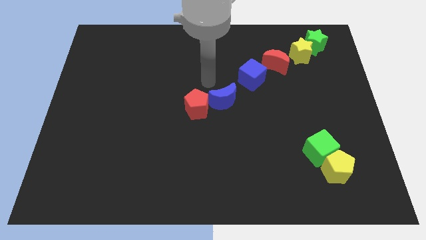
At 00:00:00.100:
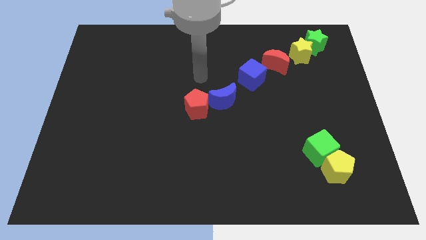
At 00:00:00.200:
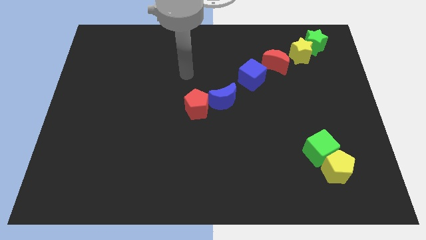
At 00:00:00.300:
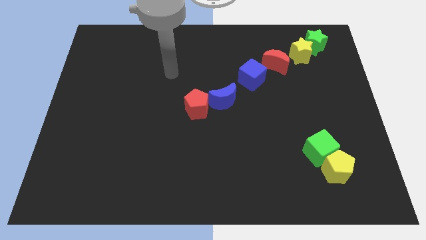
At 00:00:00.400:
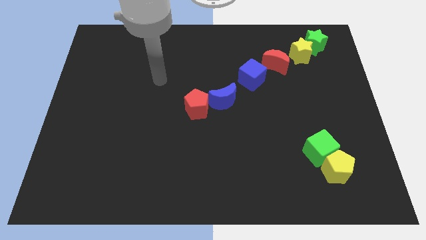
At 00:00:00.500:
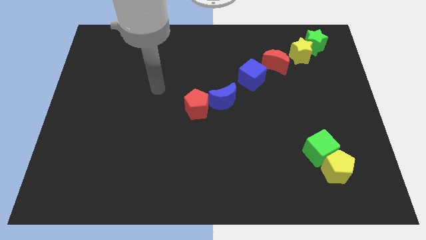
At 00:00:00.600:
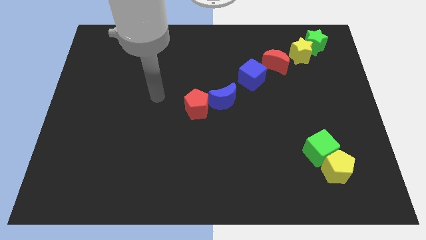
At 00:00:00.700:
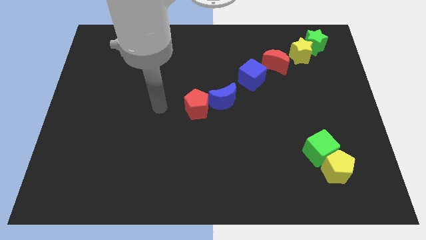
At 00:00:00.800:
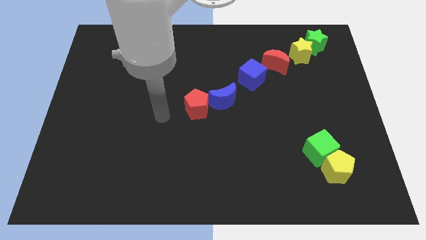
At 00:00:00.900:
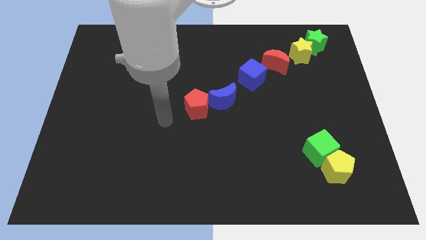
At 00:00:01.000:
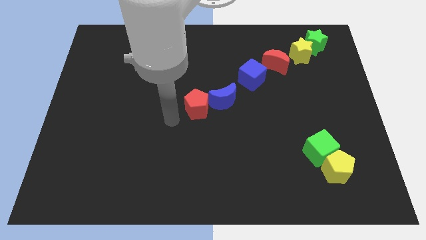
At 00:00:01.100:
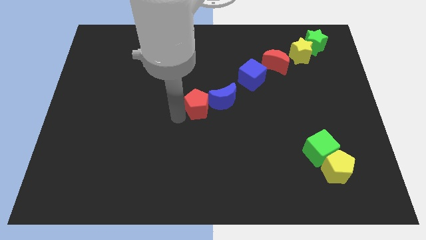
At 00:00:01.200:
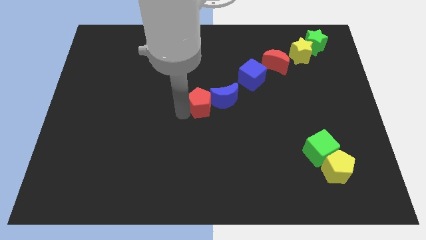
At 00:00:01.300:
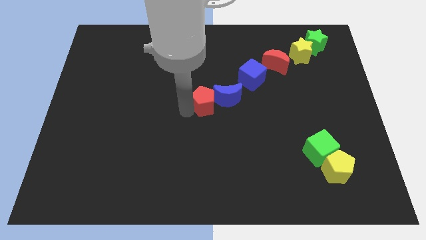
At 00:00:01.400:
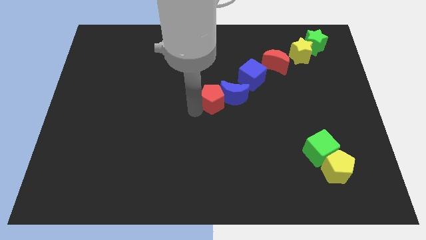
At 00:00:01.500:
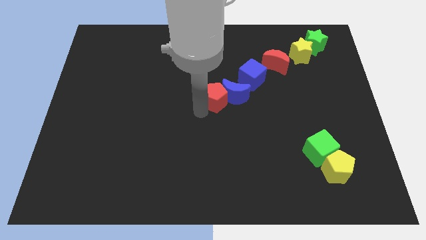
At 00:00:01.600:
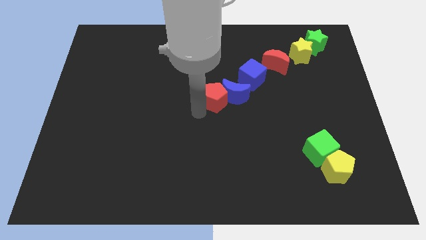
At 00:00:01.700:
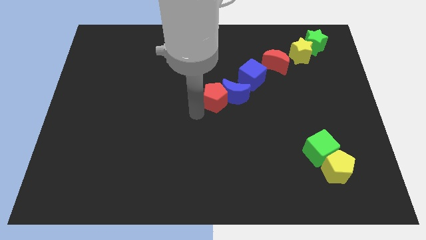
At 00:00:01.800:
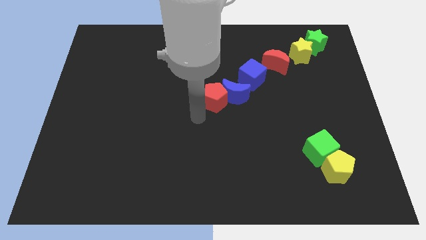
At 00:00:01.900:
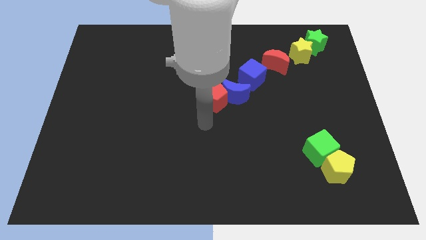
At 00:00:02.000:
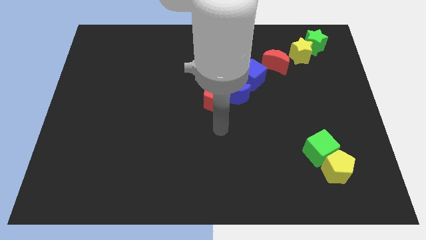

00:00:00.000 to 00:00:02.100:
push red pentagon and the blue moon towards the blue cube

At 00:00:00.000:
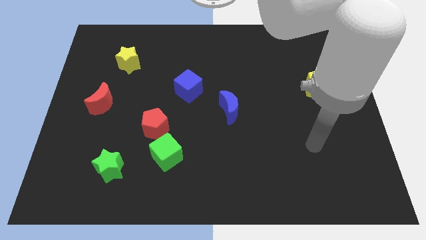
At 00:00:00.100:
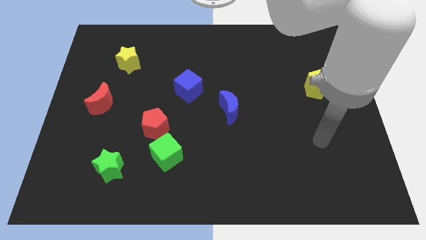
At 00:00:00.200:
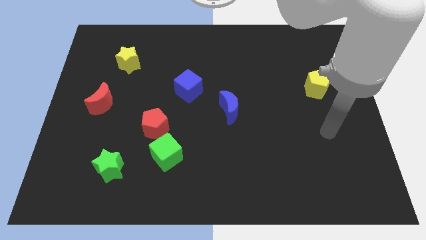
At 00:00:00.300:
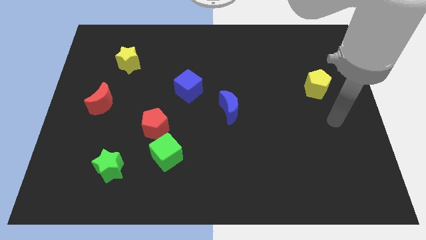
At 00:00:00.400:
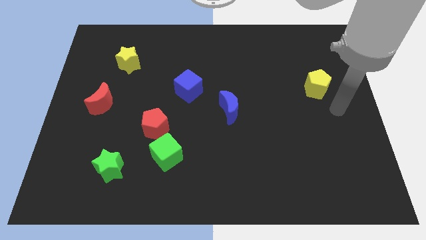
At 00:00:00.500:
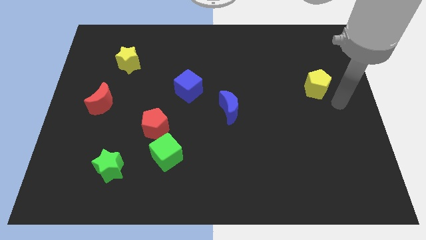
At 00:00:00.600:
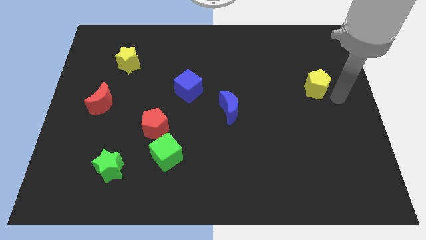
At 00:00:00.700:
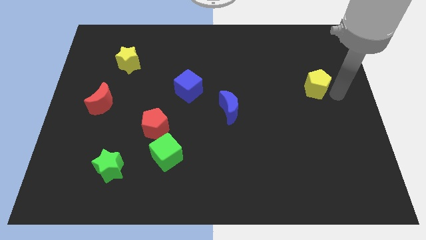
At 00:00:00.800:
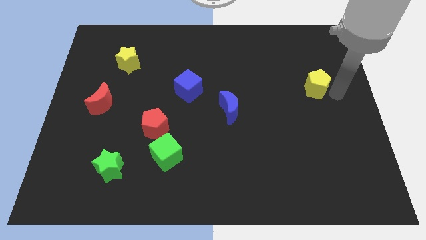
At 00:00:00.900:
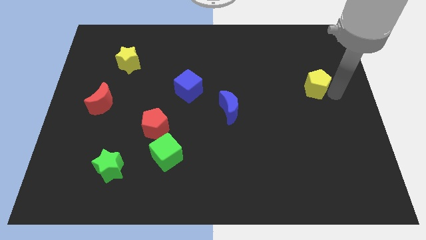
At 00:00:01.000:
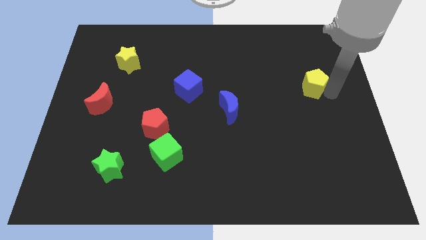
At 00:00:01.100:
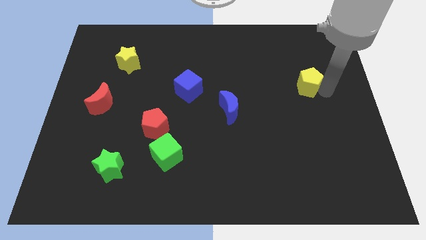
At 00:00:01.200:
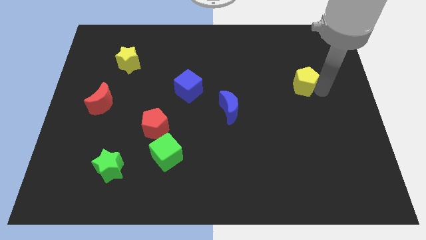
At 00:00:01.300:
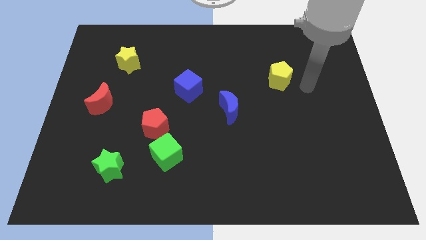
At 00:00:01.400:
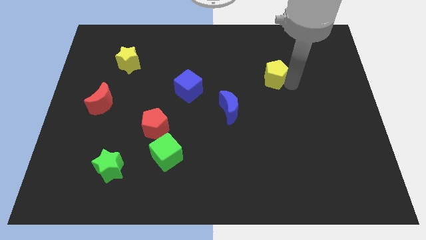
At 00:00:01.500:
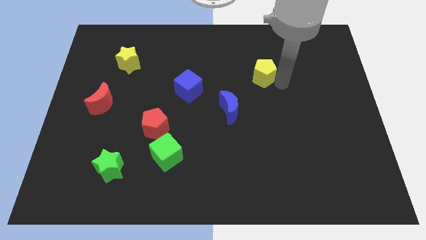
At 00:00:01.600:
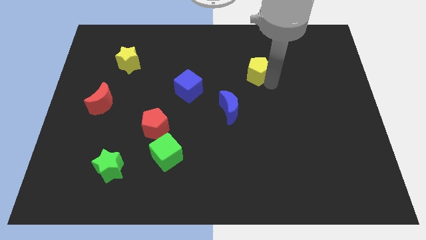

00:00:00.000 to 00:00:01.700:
push the yellow pentagon slightly to the left of the board

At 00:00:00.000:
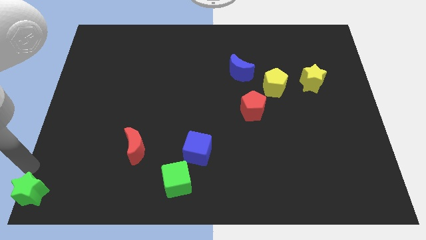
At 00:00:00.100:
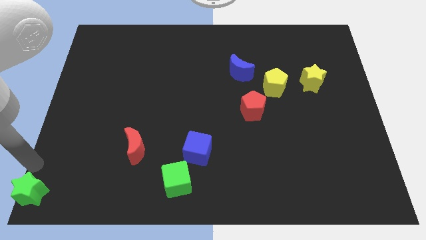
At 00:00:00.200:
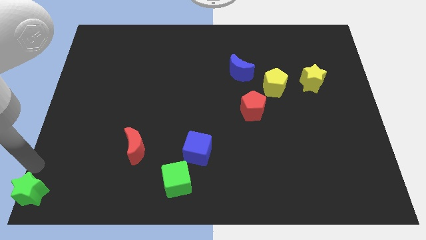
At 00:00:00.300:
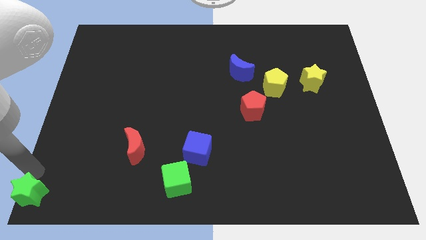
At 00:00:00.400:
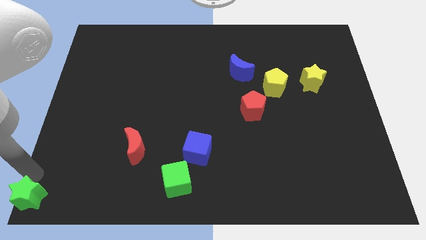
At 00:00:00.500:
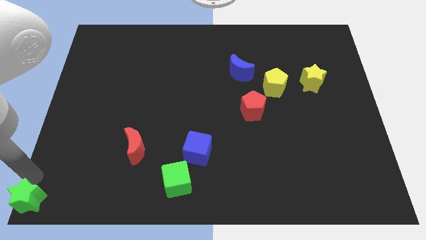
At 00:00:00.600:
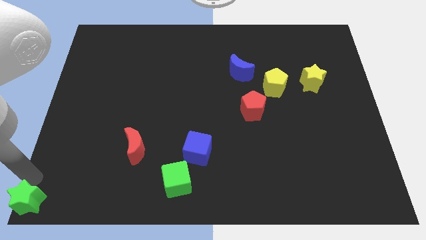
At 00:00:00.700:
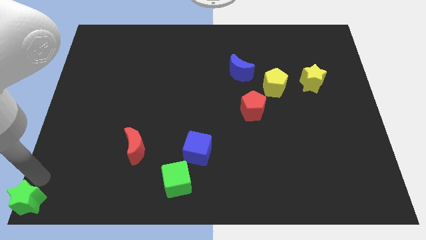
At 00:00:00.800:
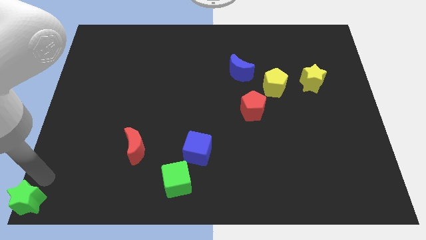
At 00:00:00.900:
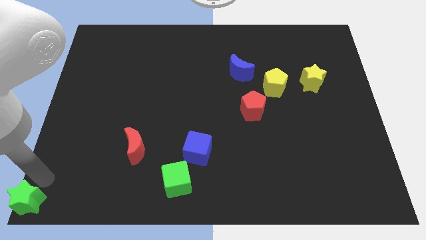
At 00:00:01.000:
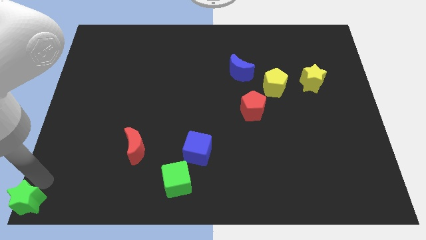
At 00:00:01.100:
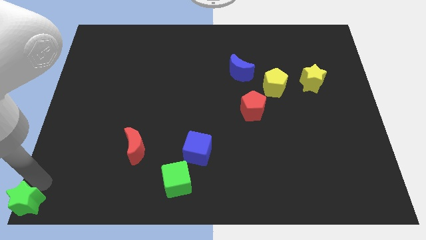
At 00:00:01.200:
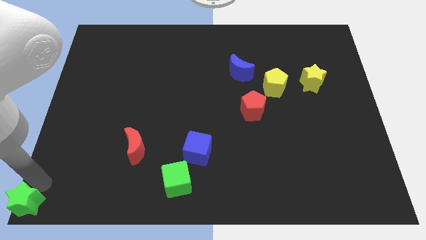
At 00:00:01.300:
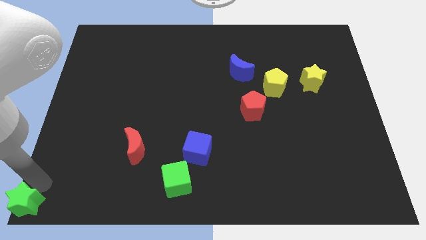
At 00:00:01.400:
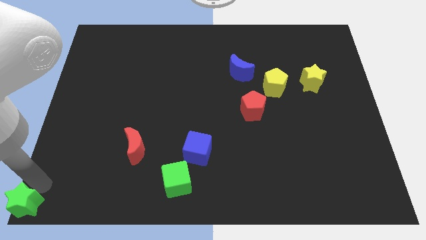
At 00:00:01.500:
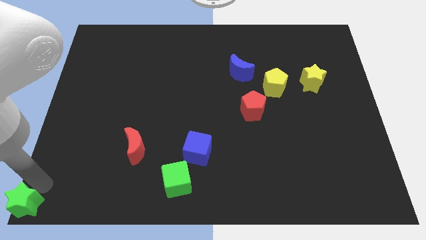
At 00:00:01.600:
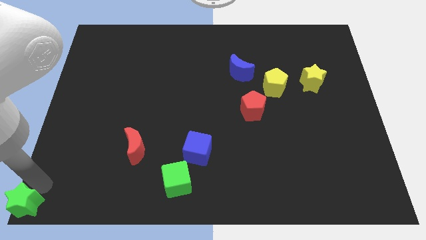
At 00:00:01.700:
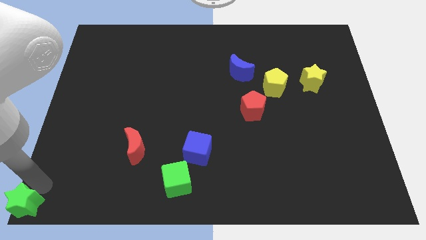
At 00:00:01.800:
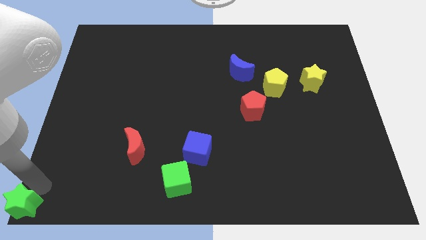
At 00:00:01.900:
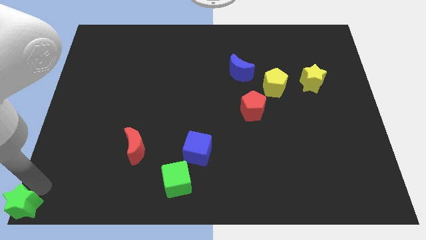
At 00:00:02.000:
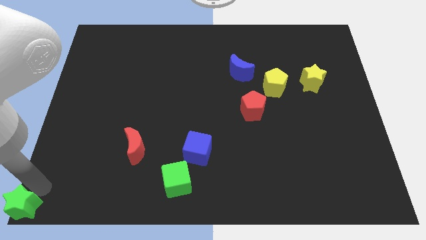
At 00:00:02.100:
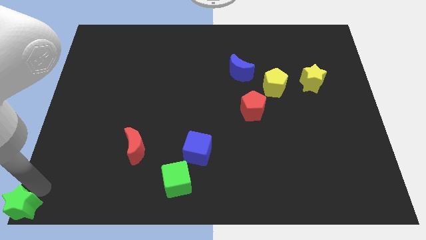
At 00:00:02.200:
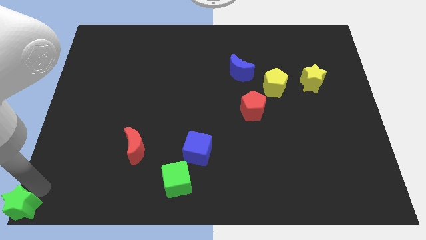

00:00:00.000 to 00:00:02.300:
place the green star to the bottom left corner side of the board

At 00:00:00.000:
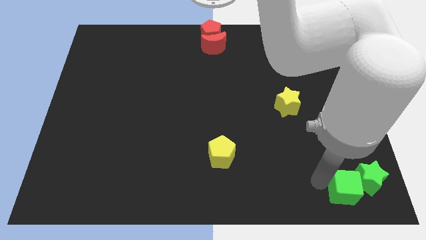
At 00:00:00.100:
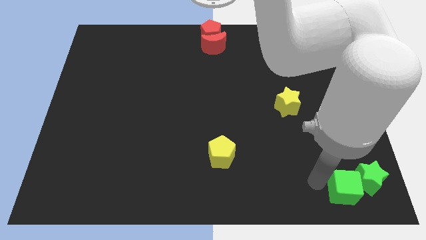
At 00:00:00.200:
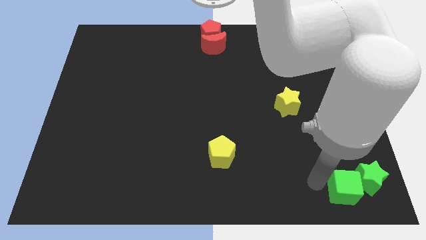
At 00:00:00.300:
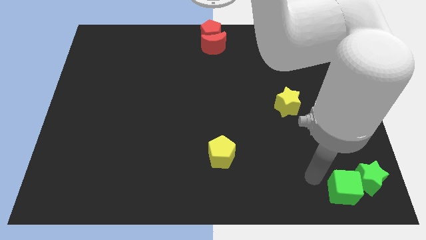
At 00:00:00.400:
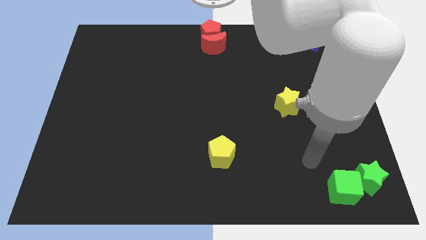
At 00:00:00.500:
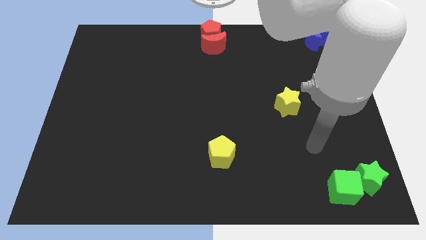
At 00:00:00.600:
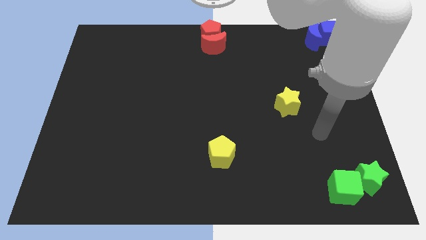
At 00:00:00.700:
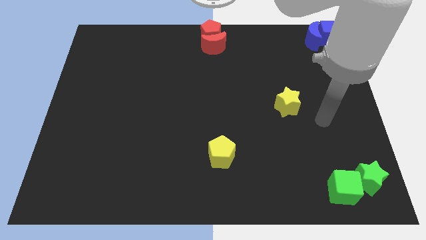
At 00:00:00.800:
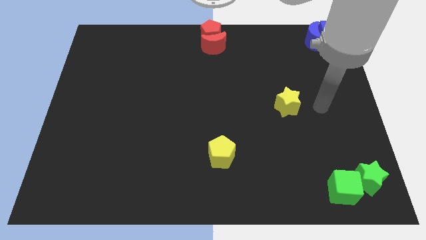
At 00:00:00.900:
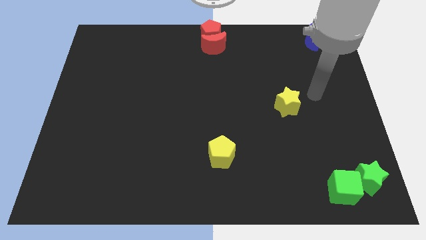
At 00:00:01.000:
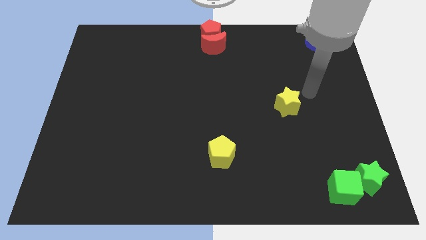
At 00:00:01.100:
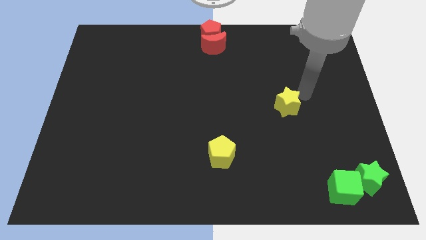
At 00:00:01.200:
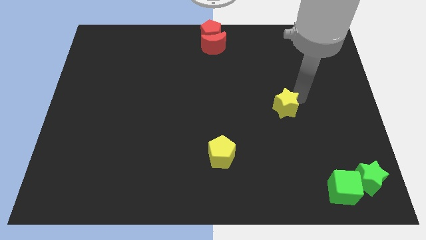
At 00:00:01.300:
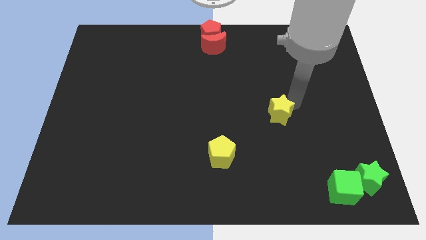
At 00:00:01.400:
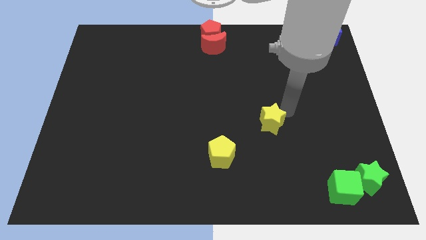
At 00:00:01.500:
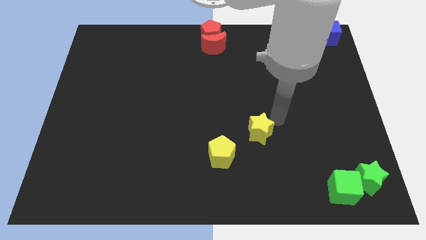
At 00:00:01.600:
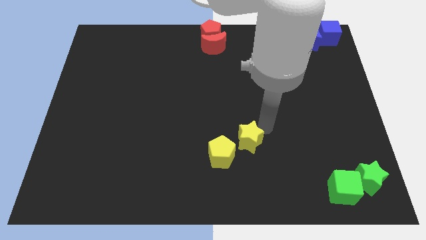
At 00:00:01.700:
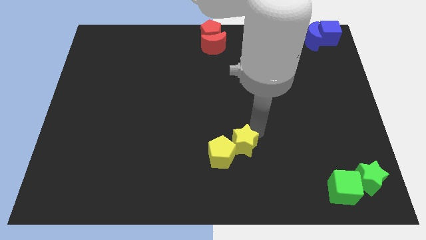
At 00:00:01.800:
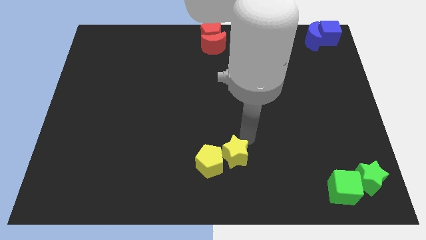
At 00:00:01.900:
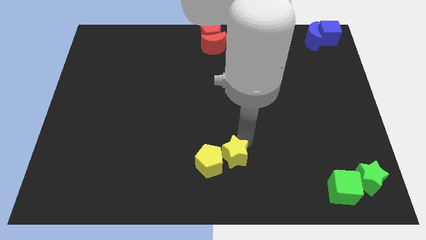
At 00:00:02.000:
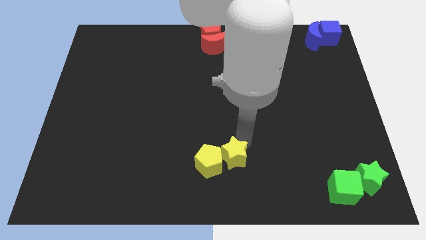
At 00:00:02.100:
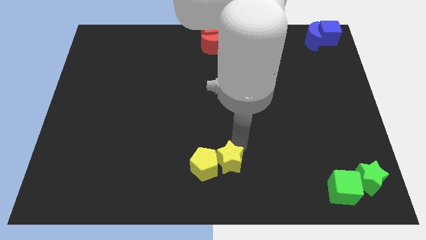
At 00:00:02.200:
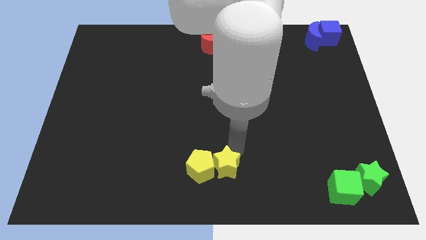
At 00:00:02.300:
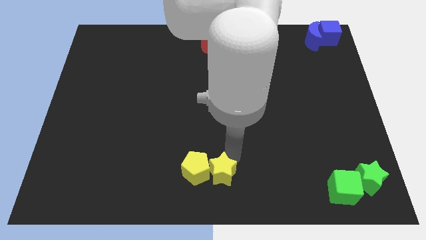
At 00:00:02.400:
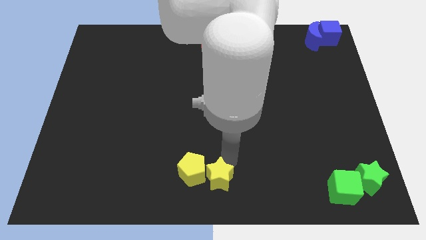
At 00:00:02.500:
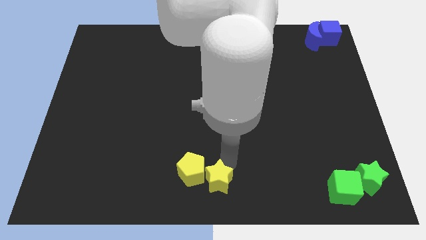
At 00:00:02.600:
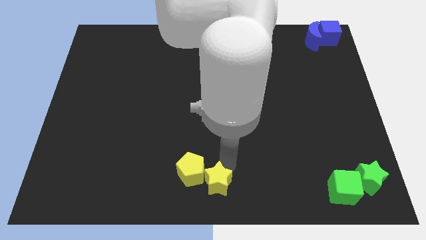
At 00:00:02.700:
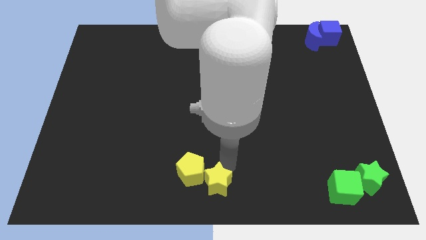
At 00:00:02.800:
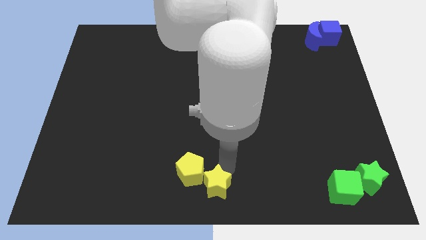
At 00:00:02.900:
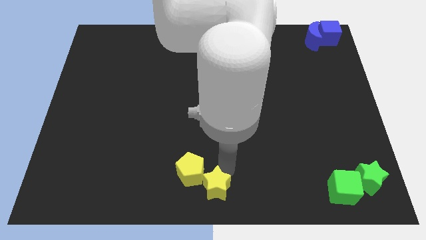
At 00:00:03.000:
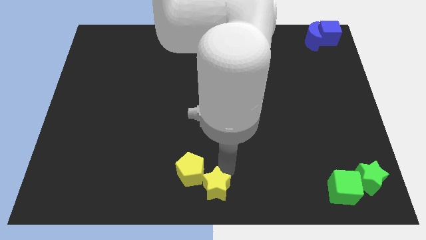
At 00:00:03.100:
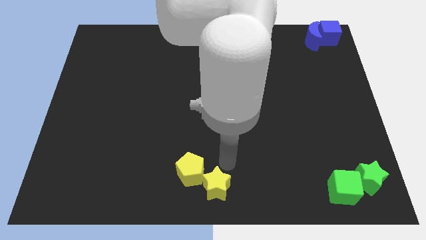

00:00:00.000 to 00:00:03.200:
move the yellow star into the yellow pentagon
